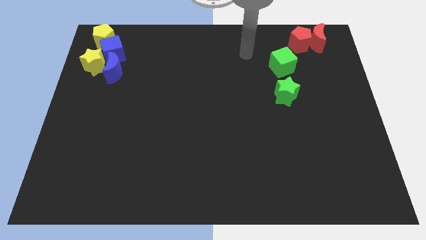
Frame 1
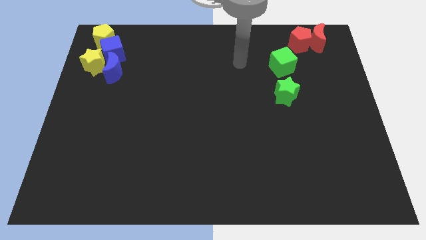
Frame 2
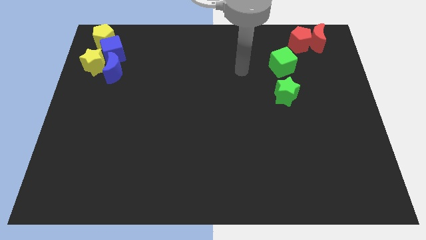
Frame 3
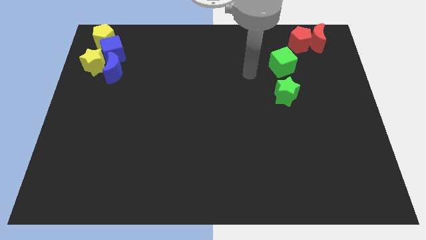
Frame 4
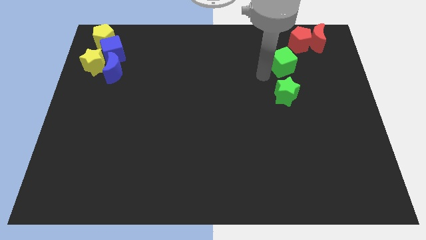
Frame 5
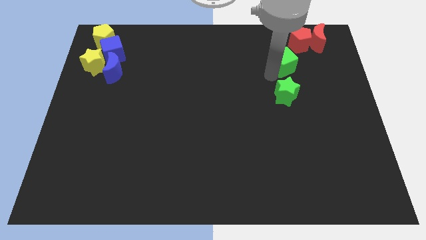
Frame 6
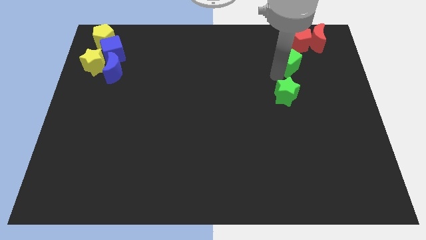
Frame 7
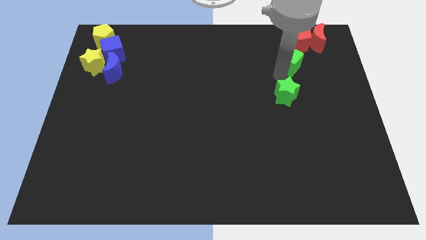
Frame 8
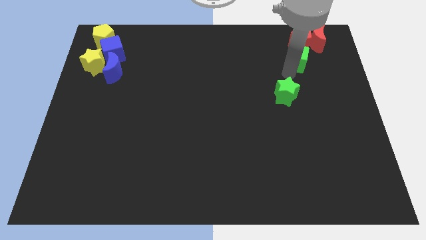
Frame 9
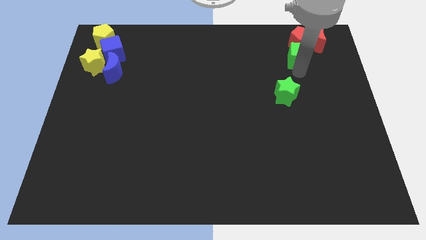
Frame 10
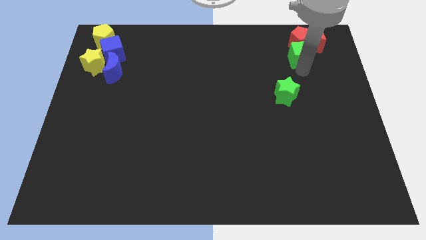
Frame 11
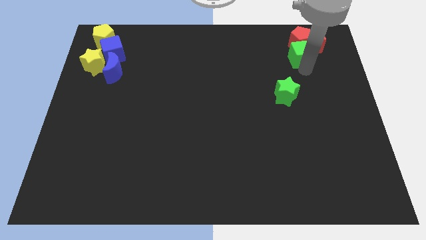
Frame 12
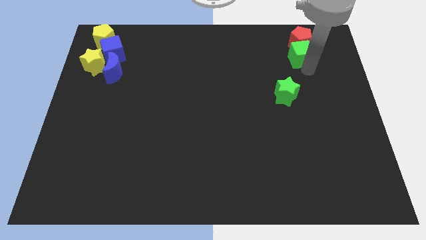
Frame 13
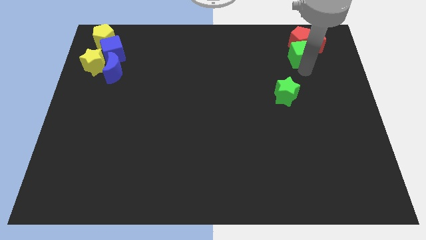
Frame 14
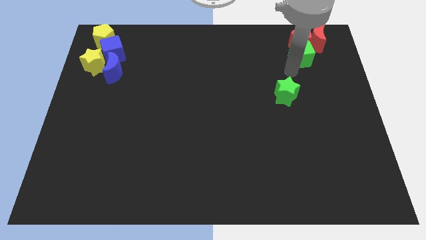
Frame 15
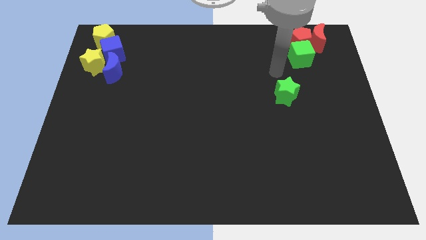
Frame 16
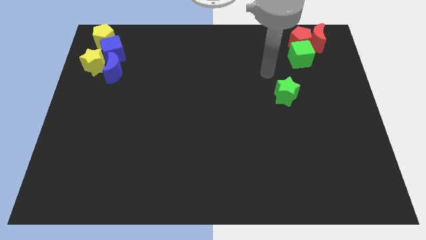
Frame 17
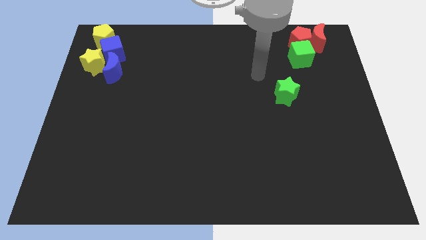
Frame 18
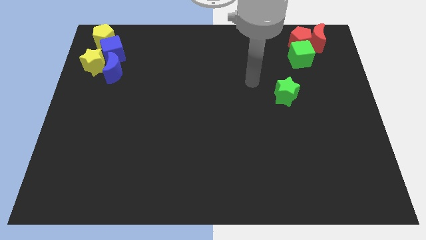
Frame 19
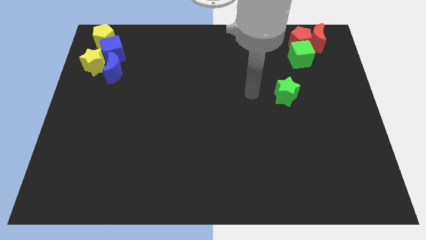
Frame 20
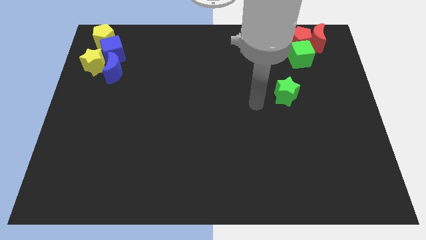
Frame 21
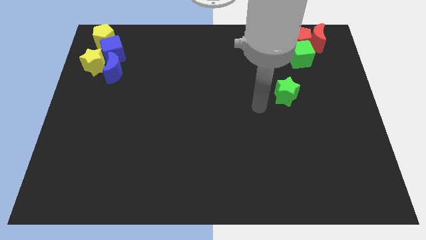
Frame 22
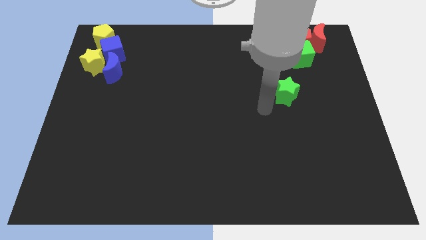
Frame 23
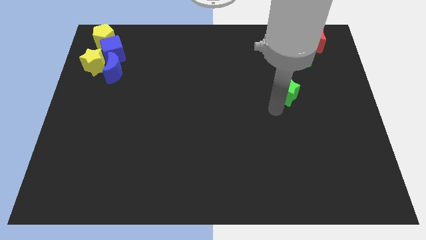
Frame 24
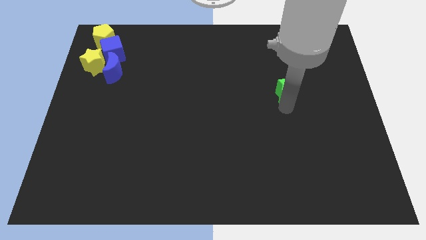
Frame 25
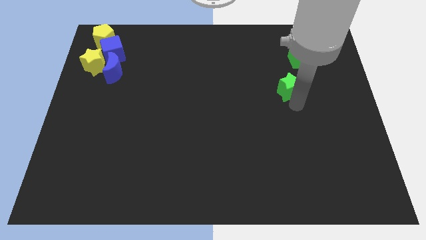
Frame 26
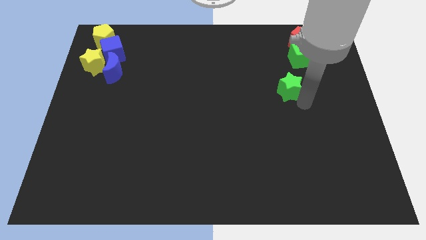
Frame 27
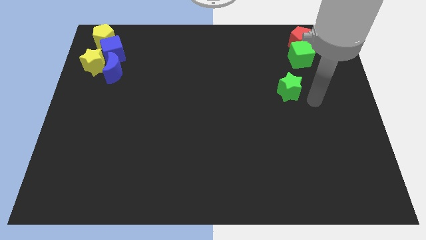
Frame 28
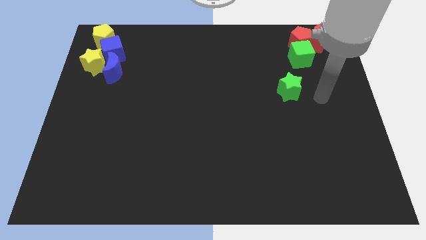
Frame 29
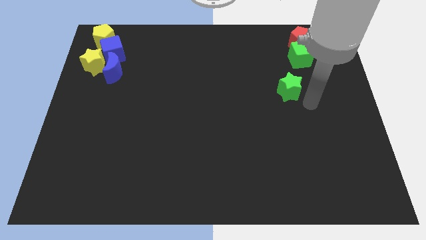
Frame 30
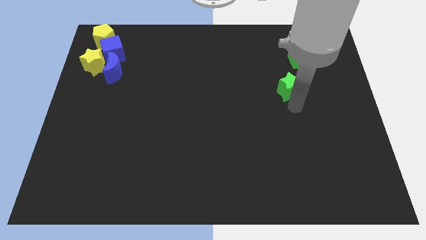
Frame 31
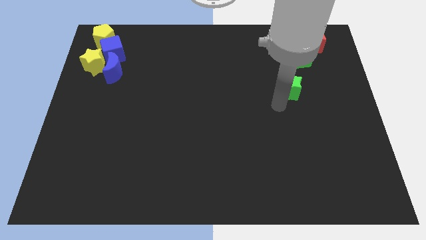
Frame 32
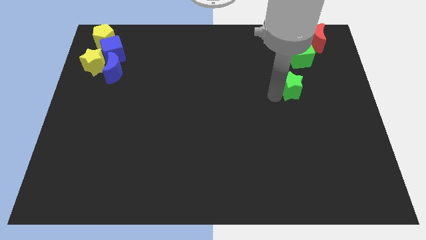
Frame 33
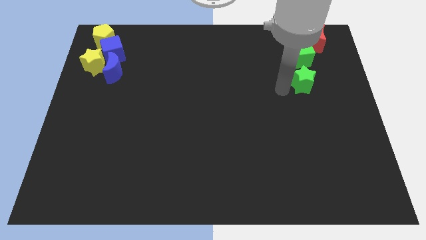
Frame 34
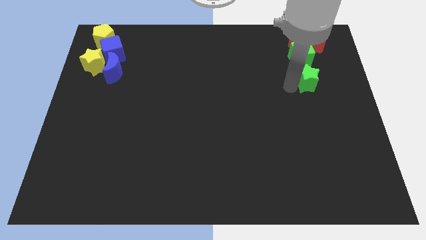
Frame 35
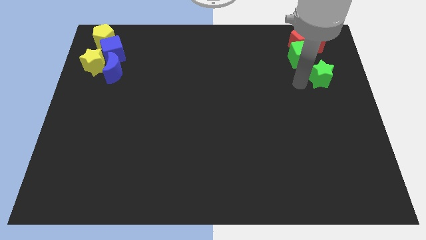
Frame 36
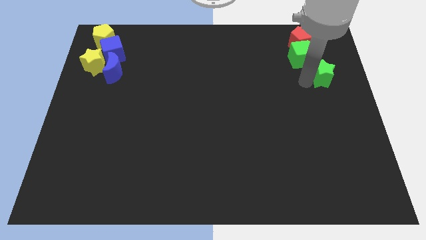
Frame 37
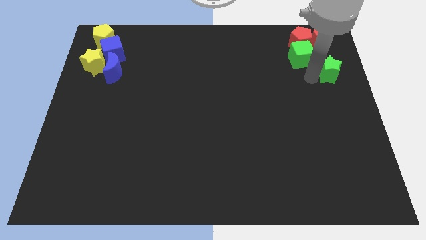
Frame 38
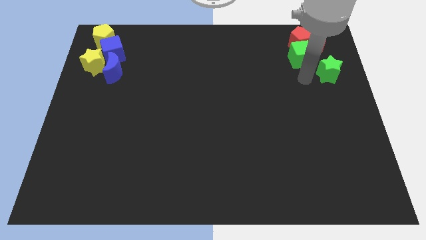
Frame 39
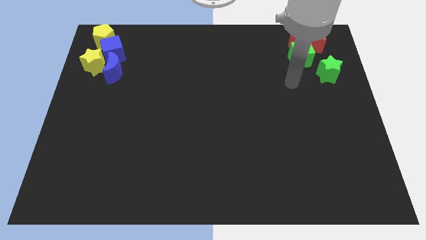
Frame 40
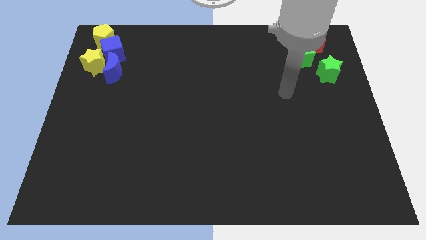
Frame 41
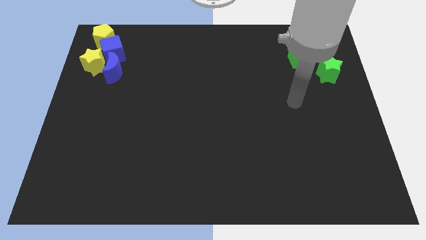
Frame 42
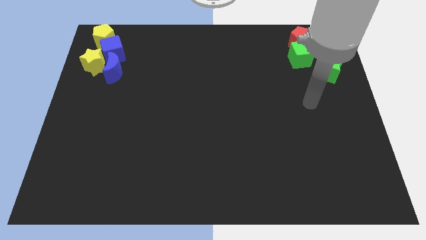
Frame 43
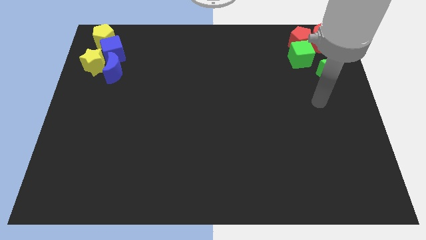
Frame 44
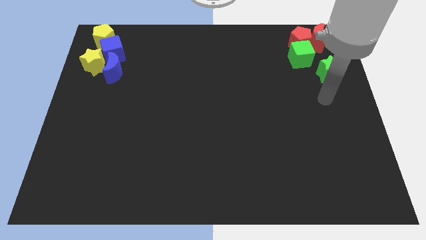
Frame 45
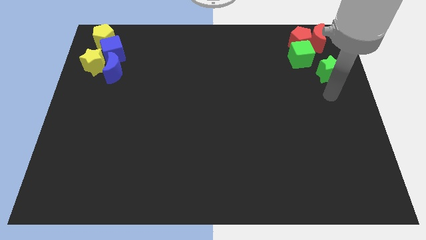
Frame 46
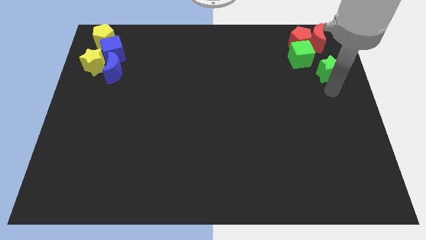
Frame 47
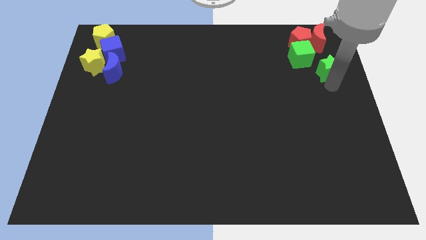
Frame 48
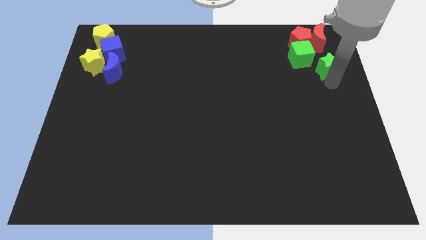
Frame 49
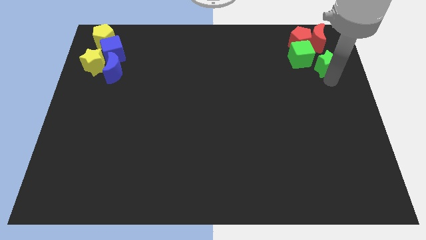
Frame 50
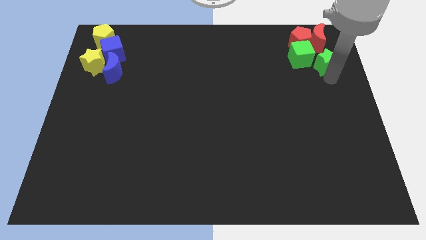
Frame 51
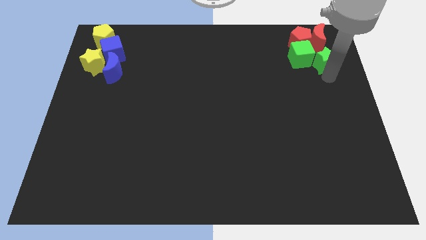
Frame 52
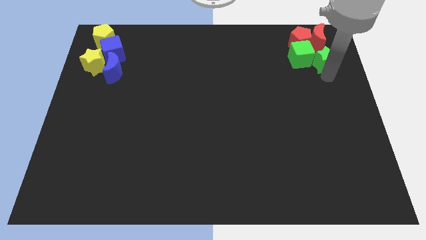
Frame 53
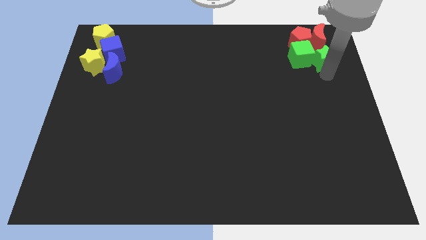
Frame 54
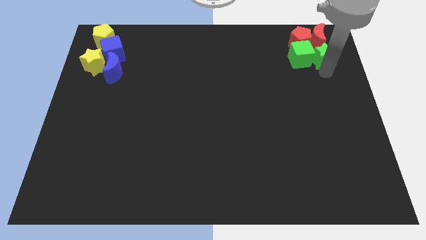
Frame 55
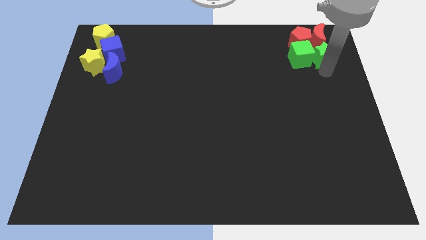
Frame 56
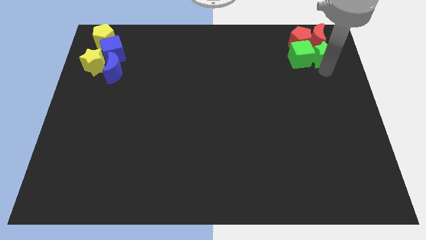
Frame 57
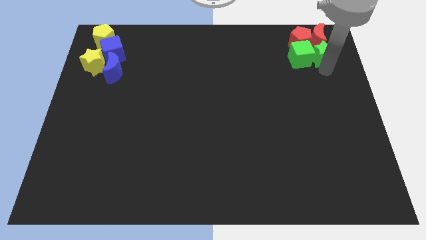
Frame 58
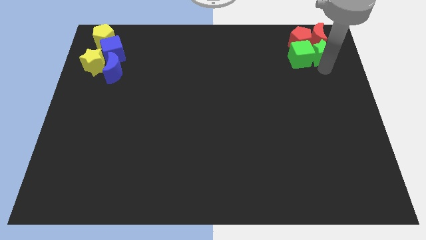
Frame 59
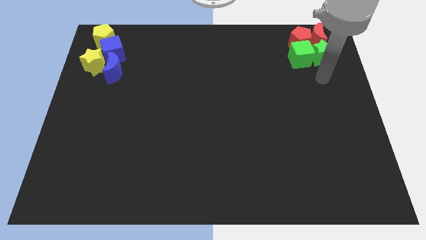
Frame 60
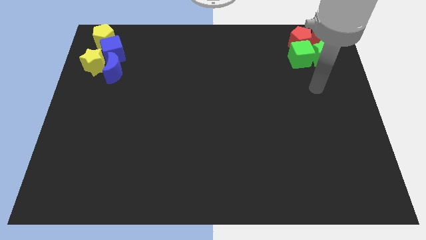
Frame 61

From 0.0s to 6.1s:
place the green cube and green star below the red pentagon and the red crescent

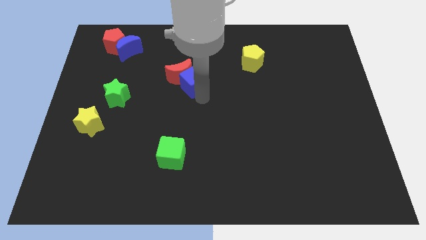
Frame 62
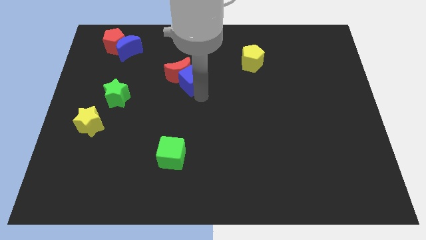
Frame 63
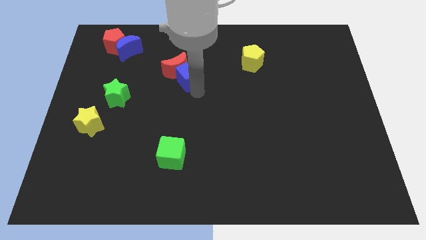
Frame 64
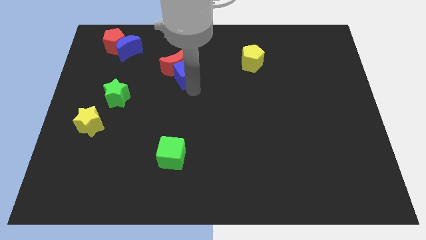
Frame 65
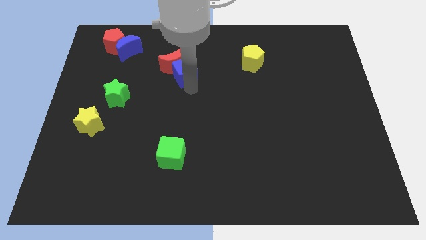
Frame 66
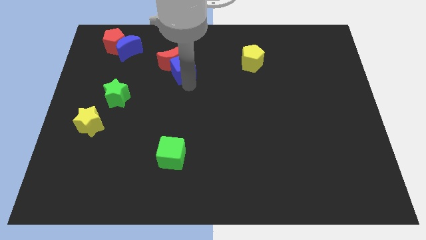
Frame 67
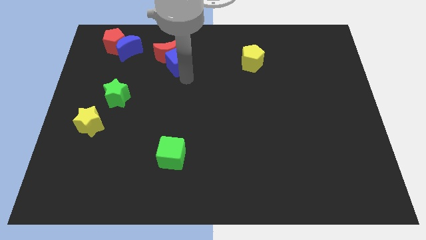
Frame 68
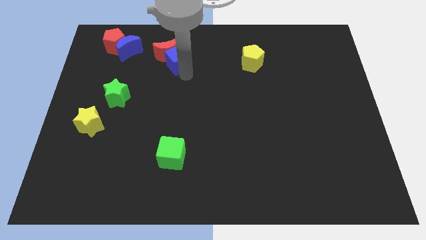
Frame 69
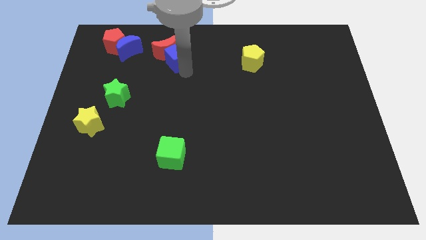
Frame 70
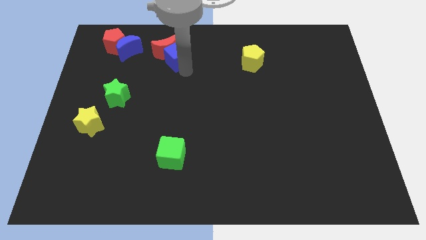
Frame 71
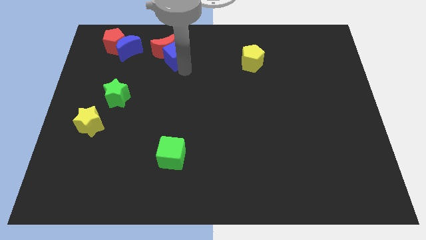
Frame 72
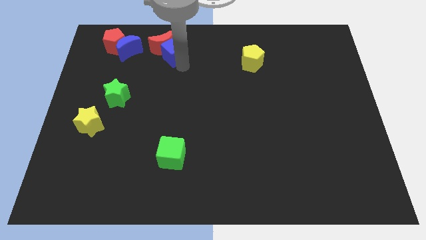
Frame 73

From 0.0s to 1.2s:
push the red moon and blue cube towards upward

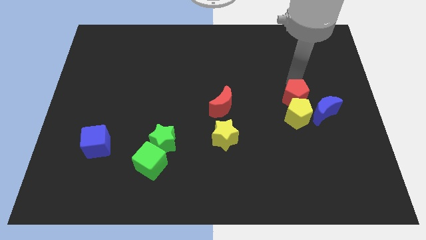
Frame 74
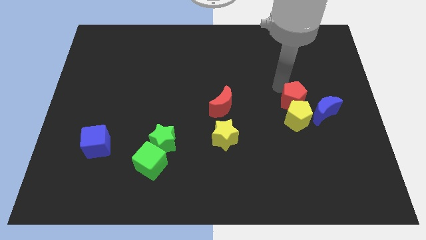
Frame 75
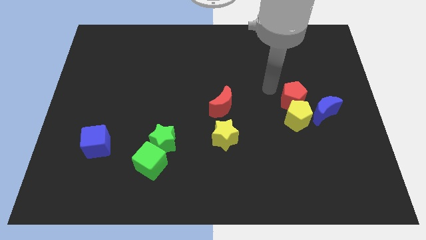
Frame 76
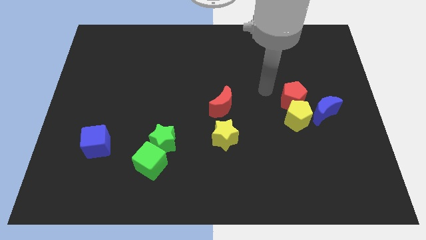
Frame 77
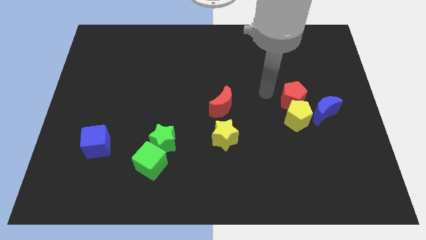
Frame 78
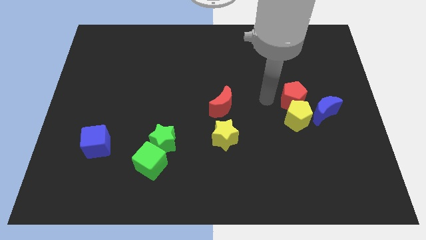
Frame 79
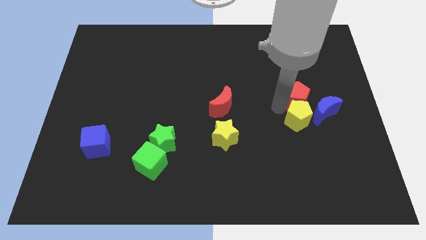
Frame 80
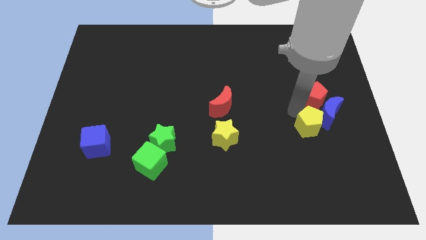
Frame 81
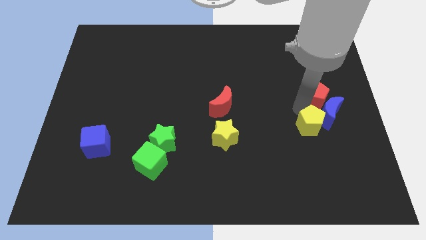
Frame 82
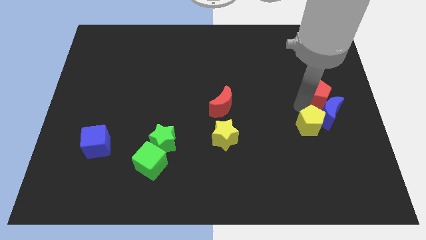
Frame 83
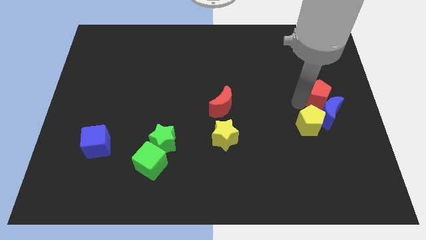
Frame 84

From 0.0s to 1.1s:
slide red pentagon into blue moon

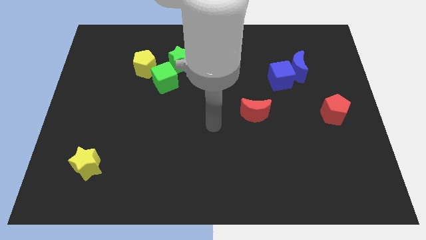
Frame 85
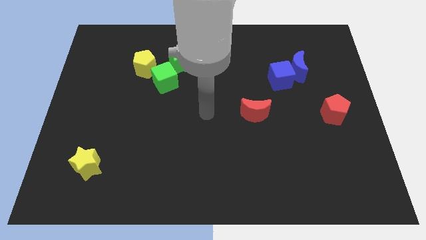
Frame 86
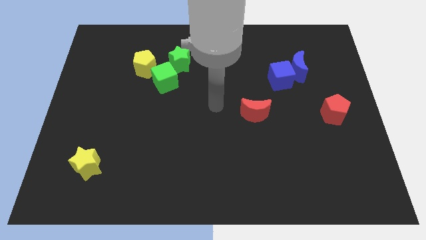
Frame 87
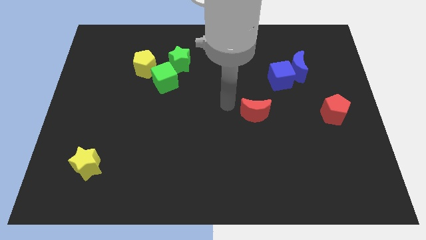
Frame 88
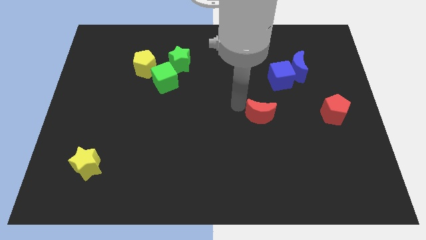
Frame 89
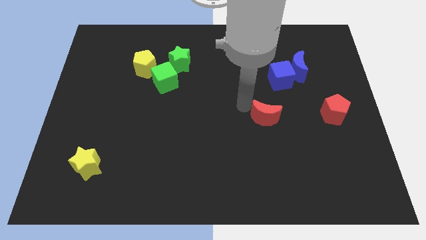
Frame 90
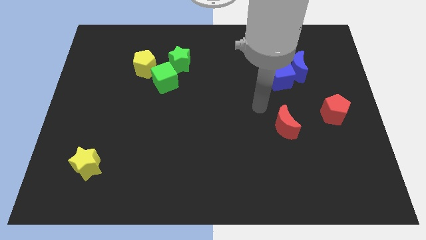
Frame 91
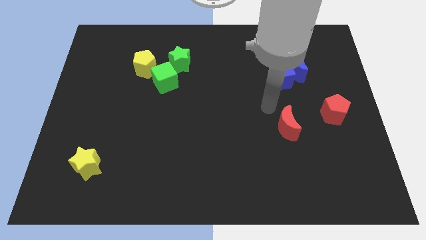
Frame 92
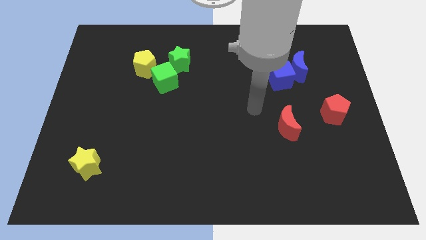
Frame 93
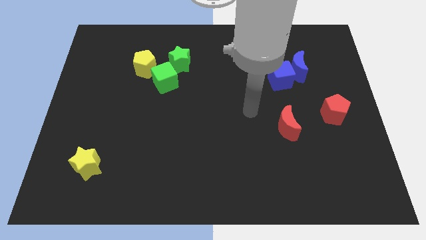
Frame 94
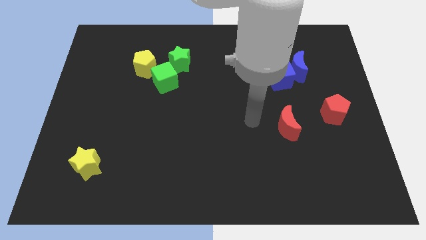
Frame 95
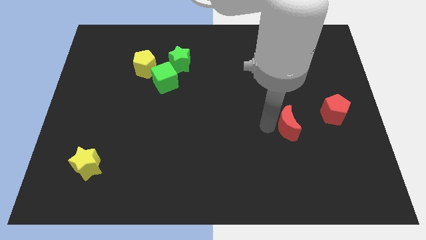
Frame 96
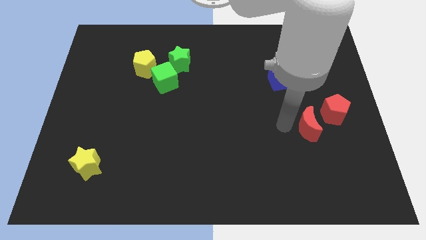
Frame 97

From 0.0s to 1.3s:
push the red crescent slightly to the right
